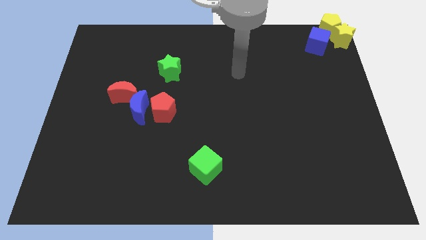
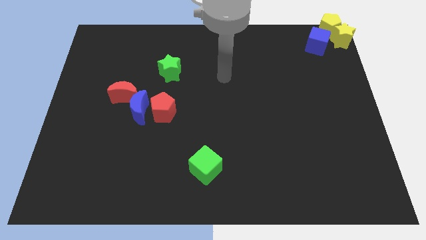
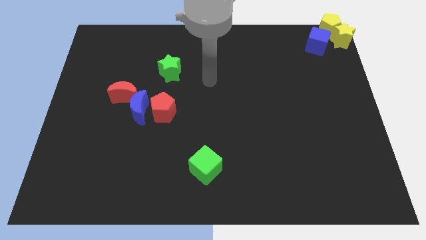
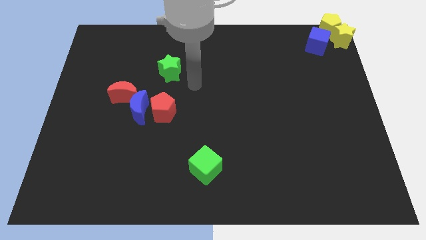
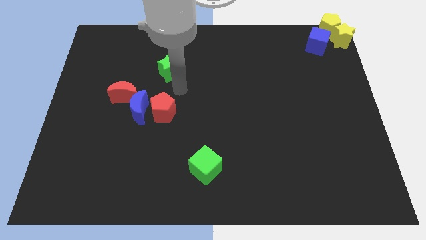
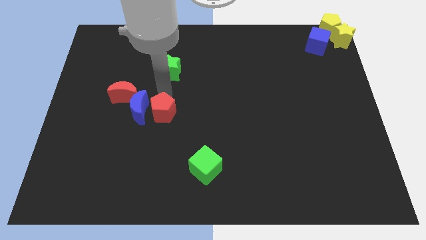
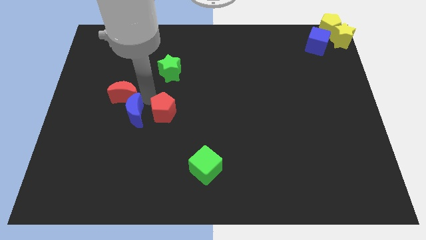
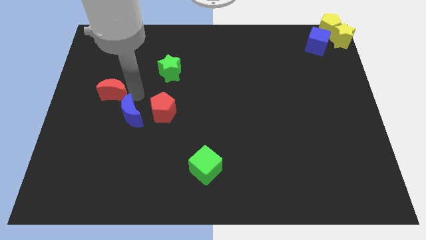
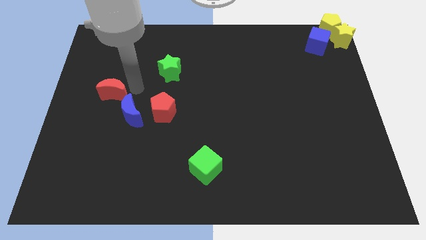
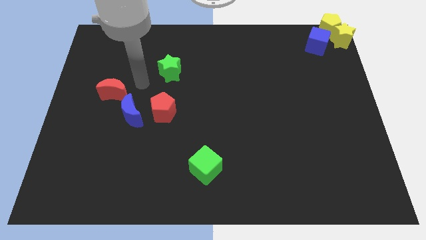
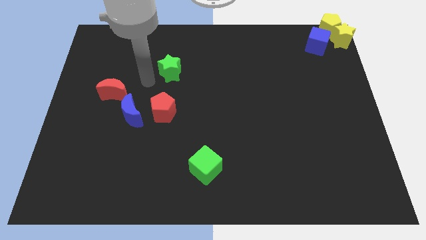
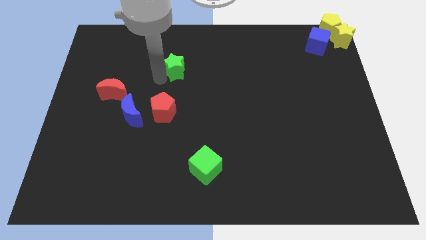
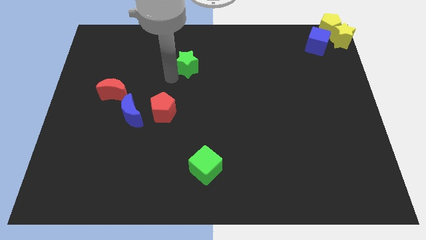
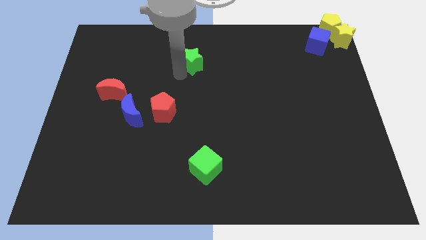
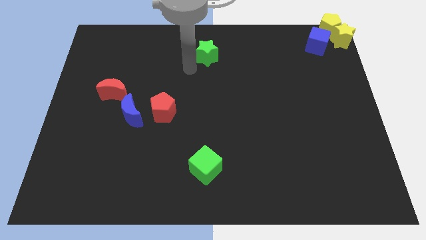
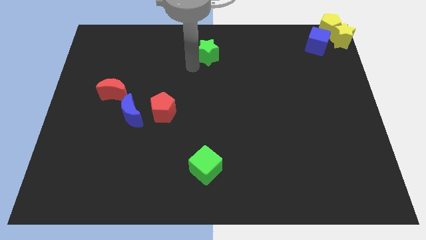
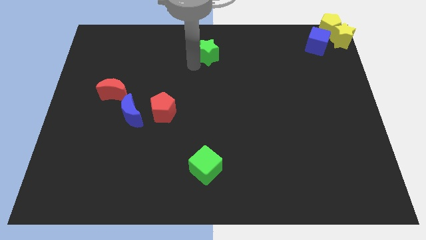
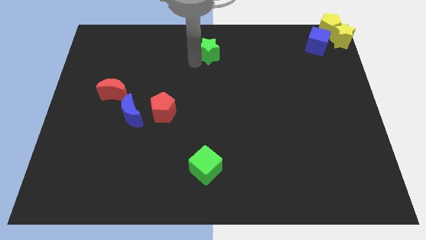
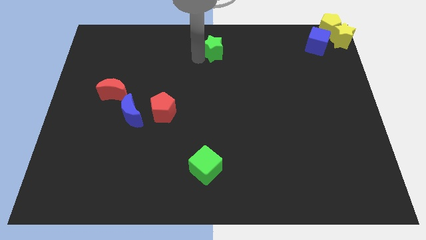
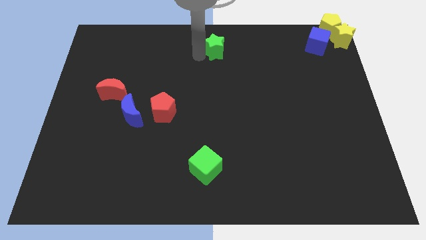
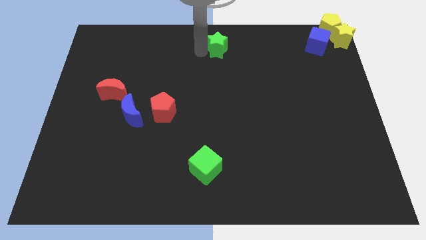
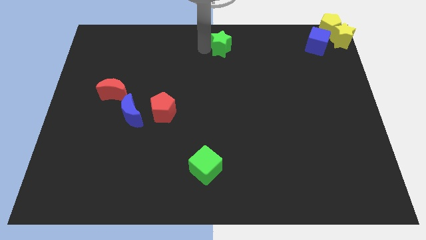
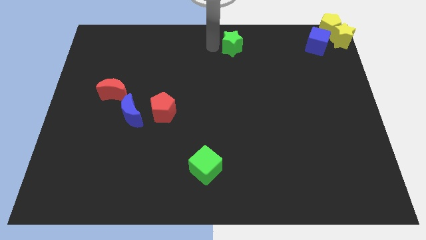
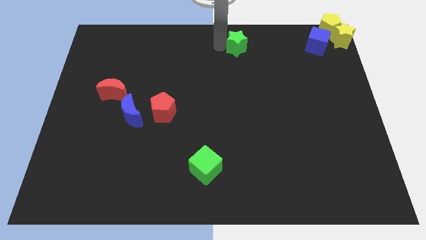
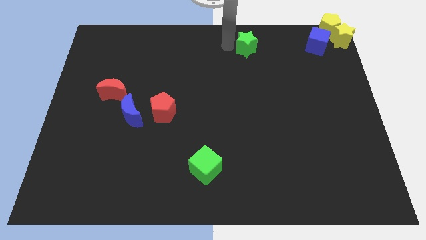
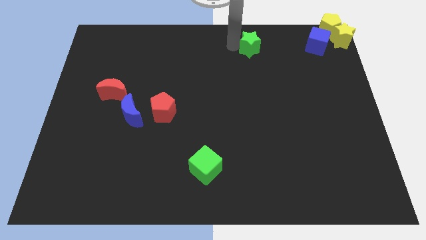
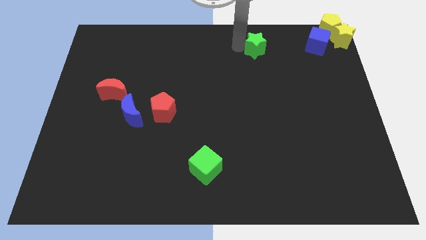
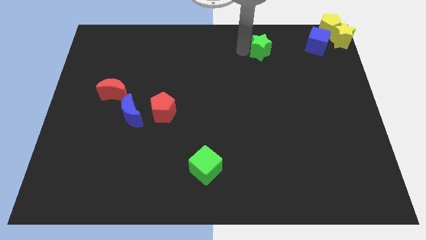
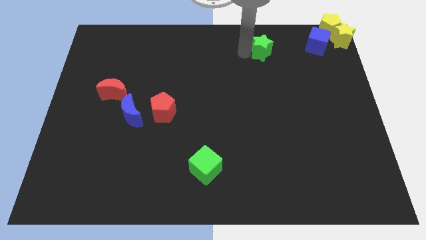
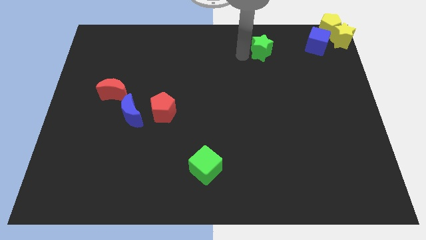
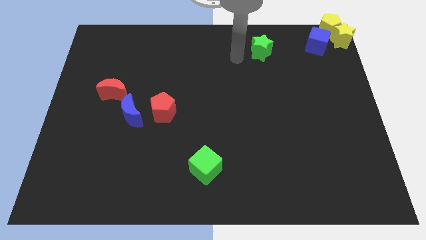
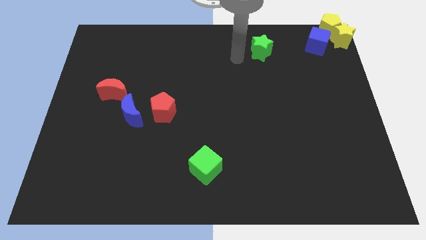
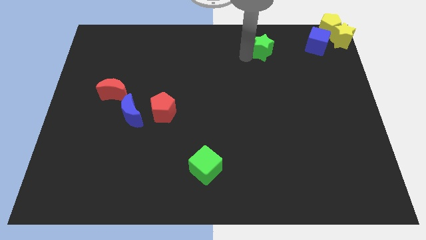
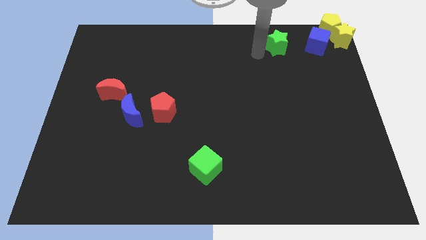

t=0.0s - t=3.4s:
place the green star left to the blue cube

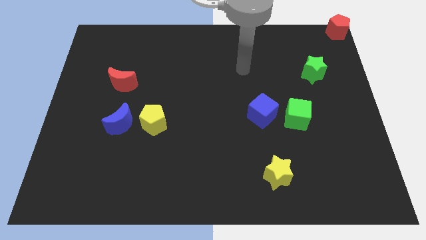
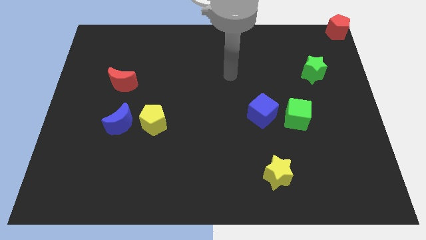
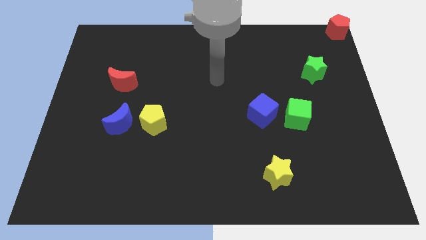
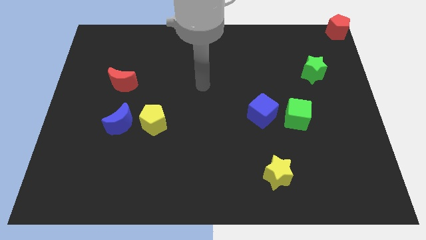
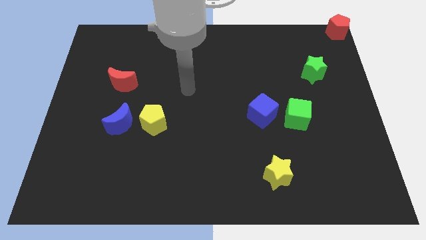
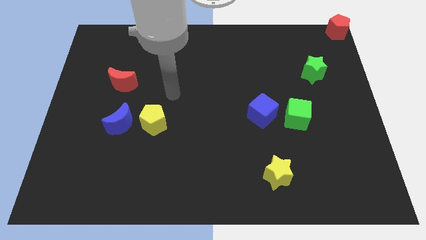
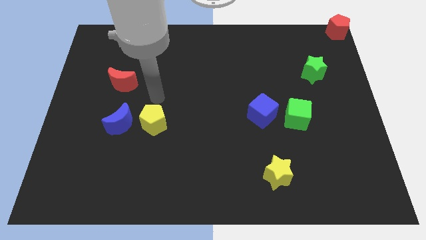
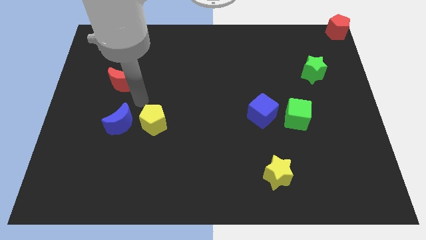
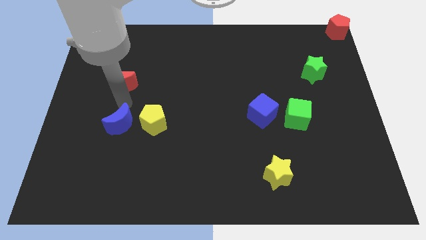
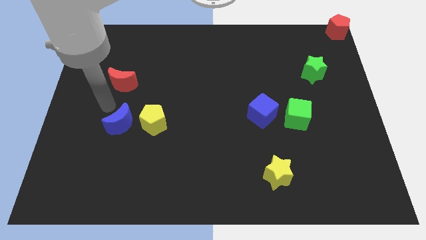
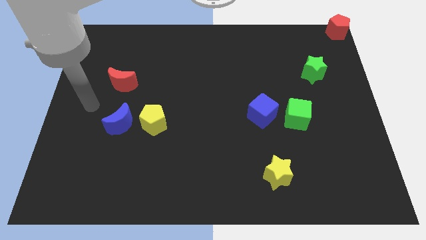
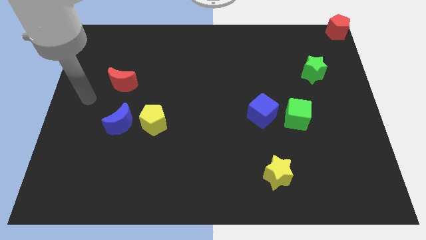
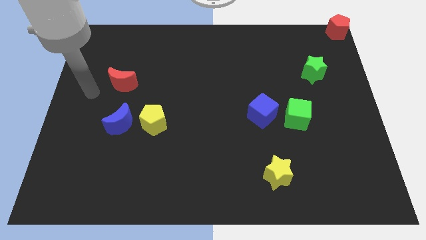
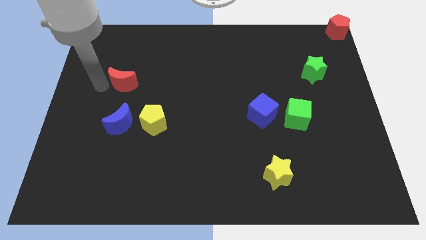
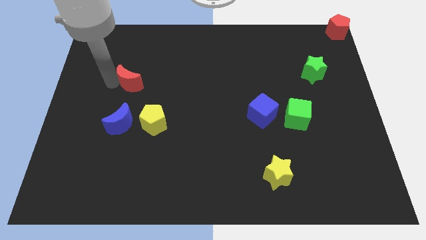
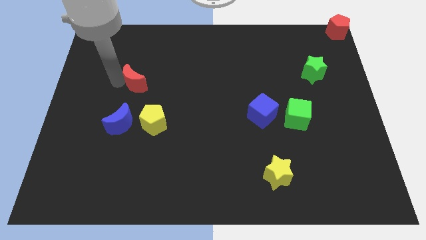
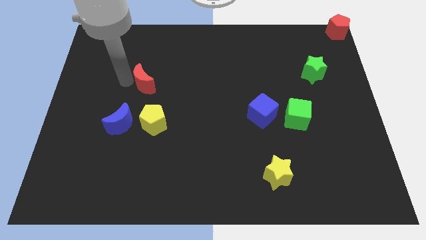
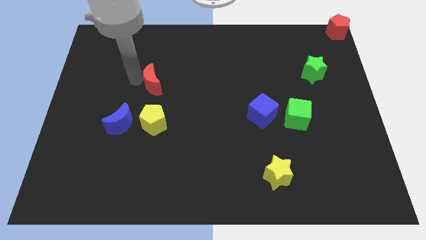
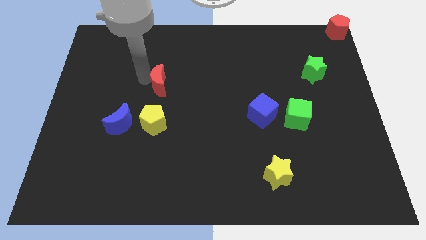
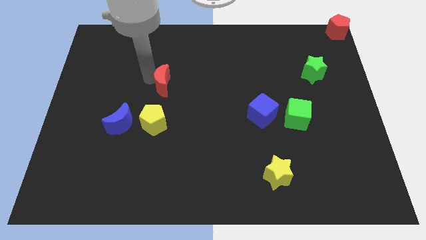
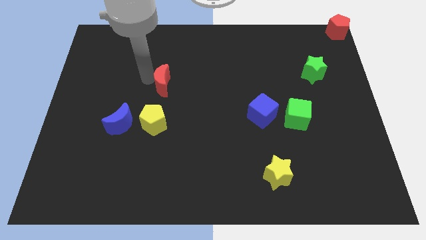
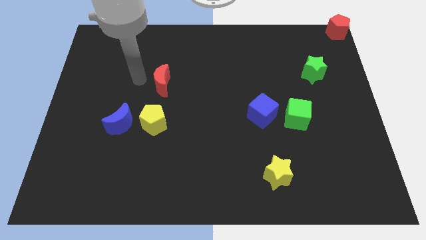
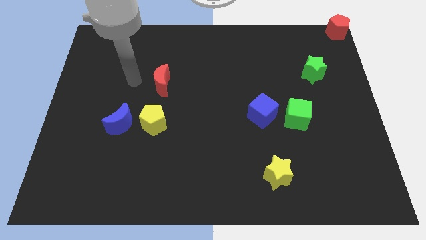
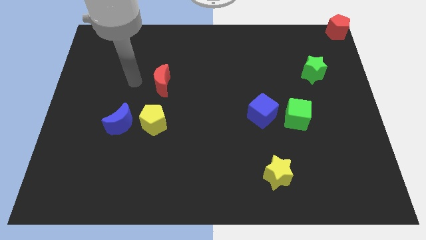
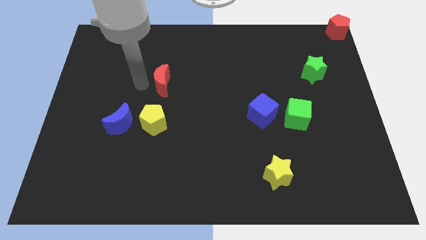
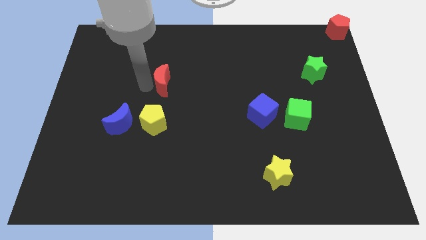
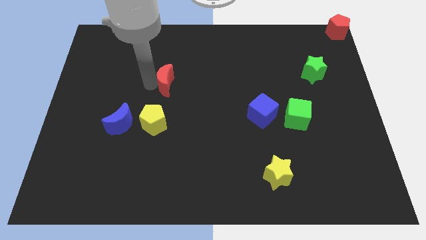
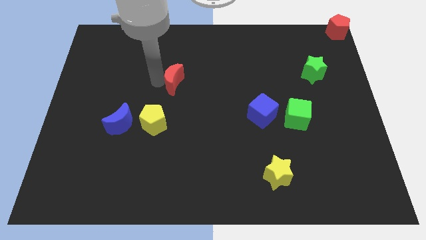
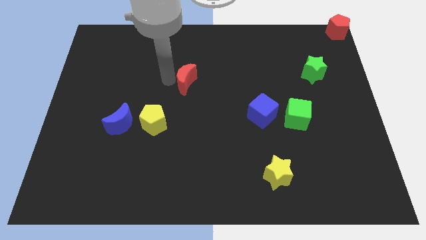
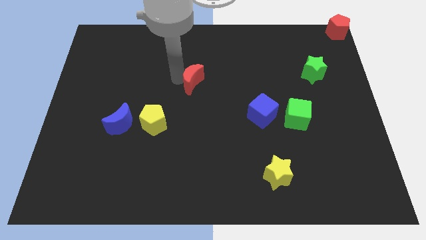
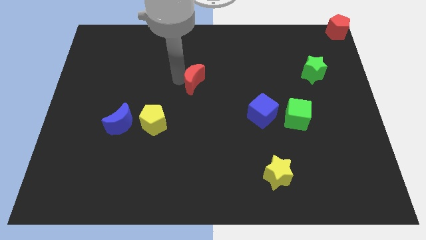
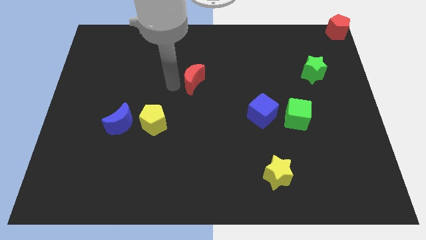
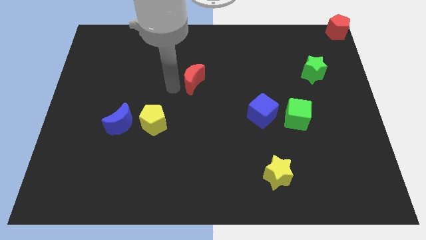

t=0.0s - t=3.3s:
push the red moon to the center

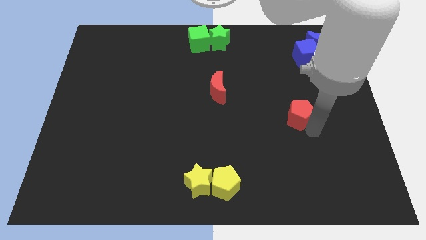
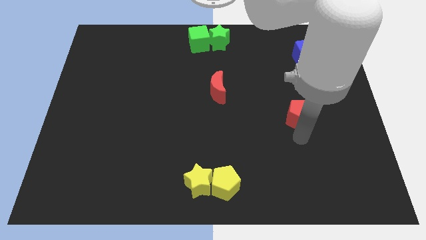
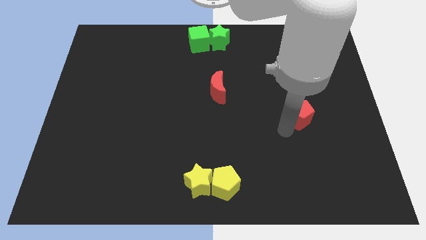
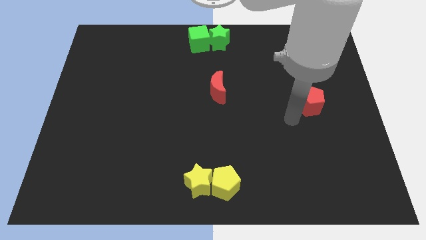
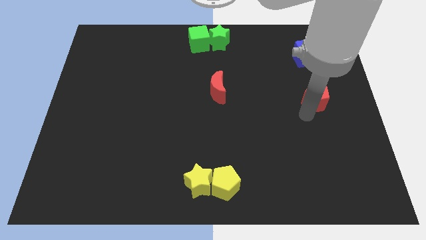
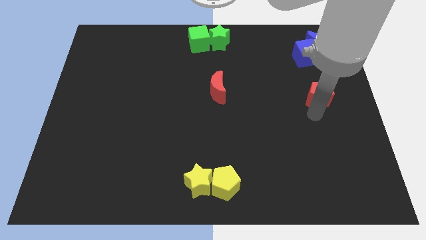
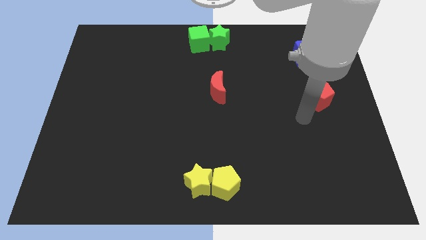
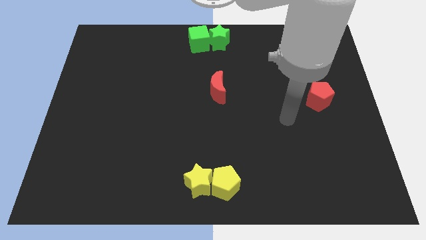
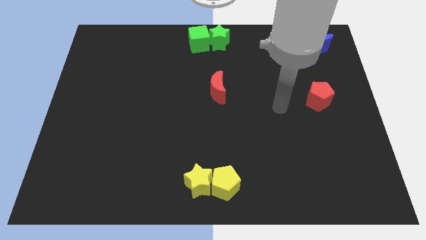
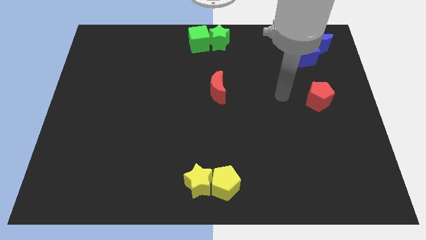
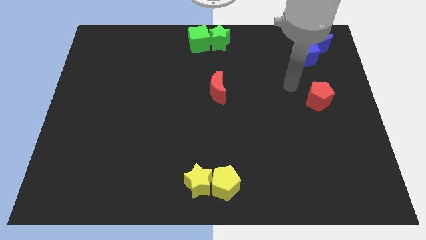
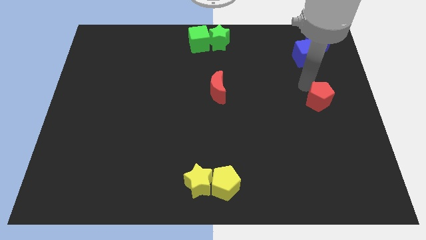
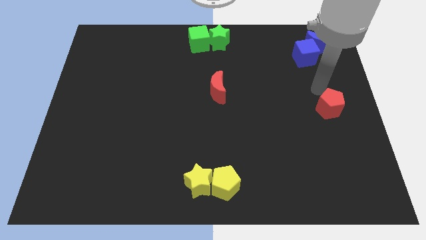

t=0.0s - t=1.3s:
place the red pentagon towards the center right side of the board

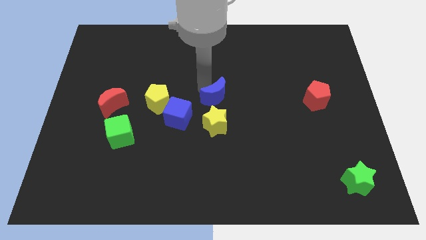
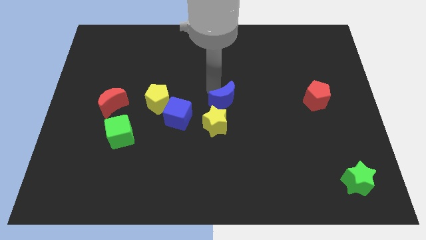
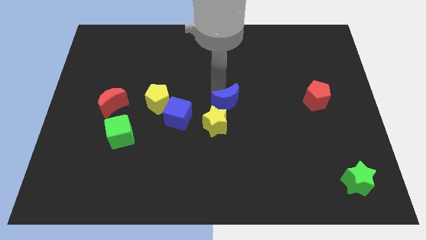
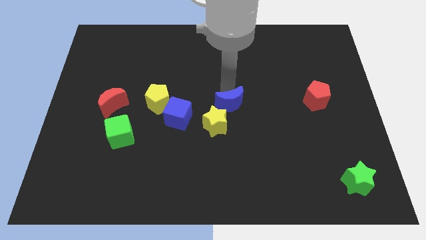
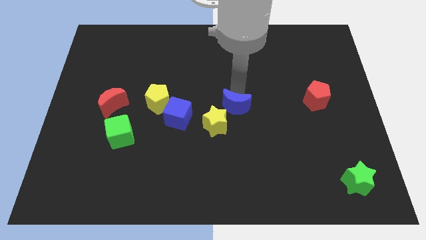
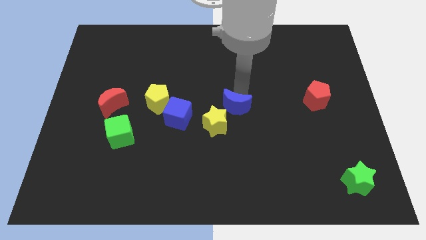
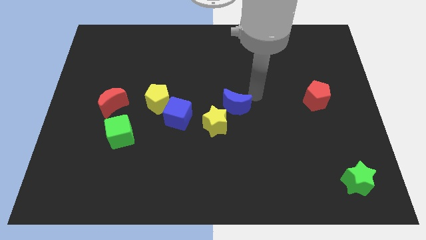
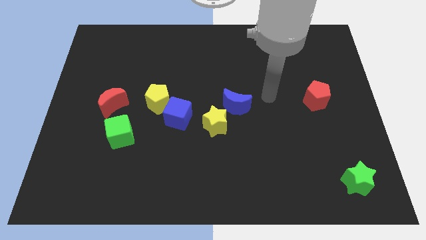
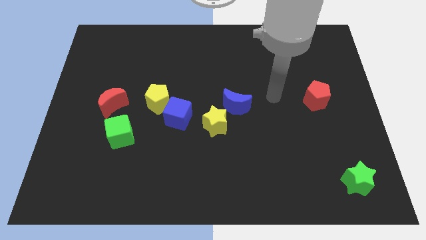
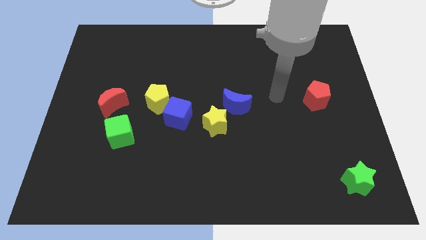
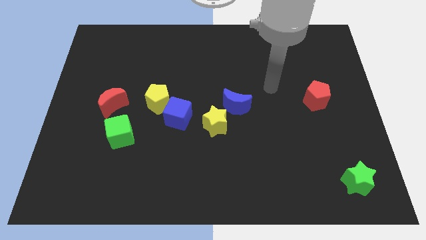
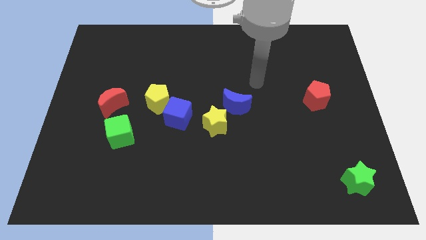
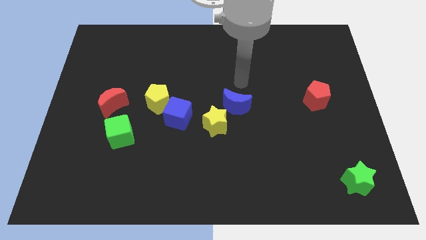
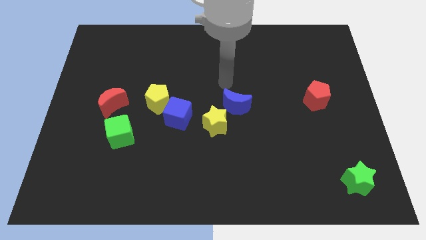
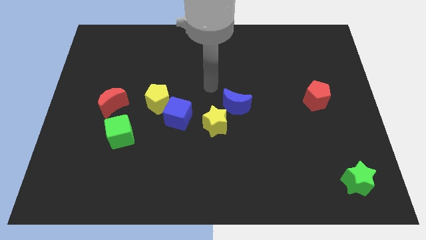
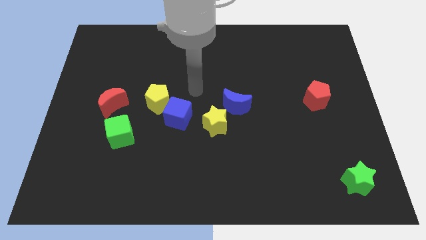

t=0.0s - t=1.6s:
move the blue crescent slightly to the right
